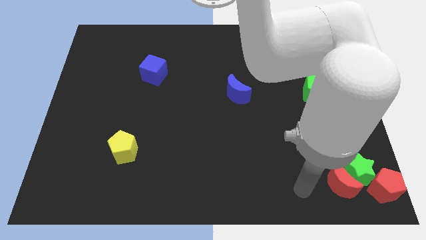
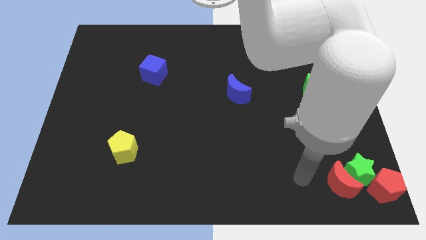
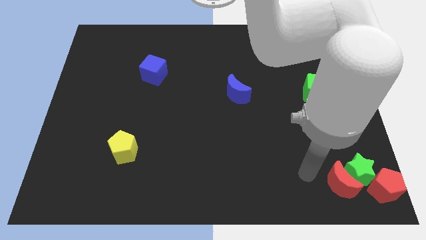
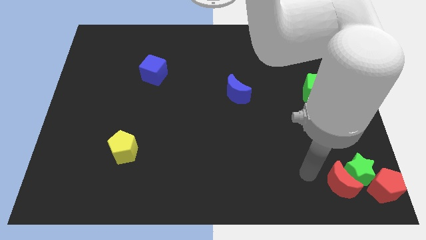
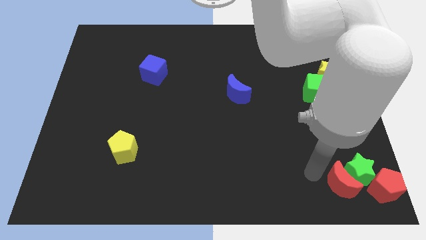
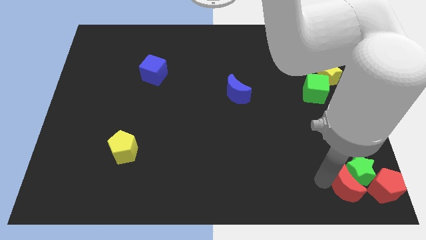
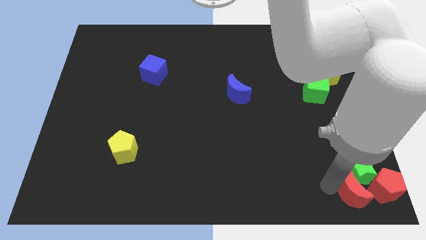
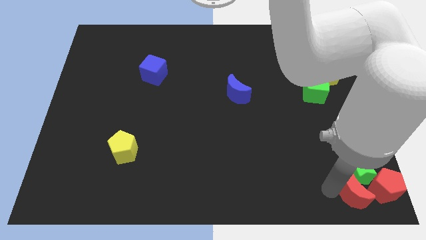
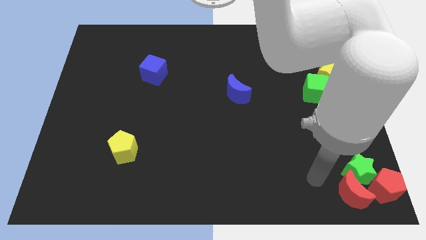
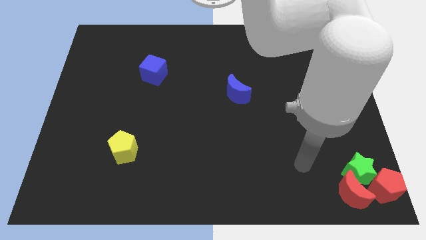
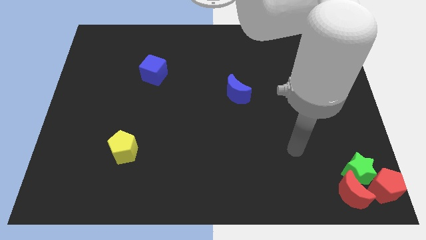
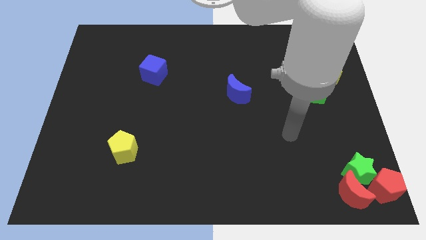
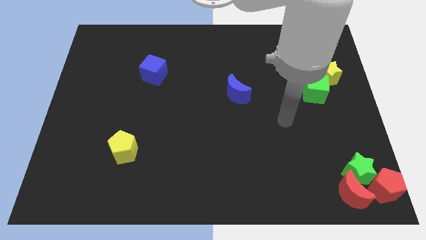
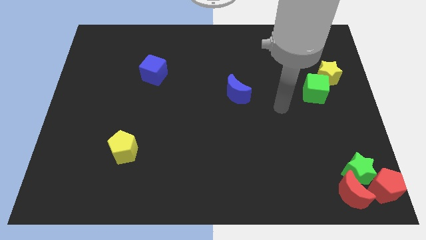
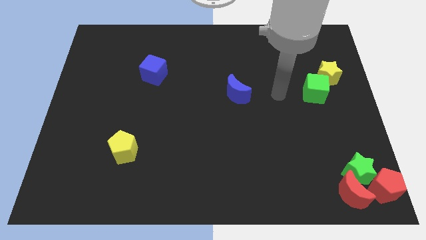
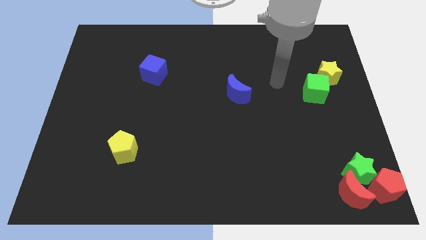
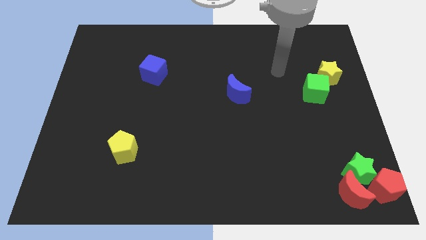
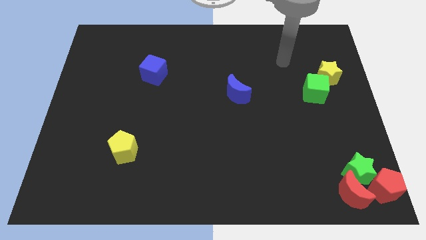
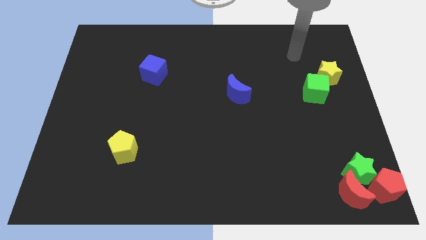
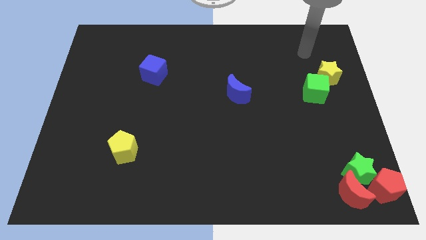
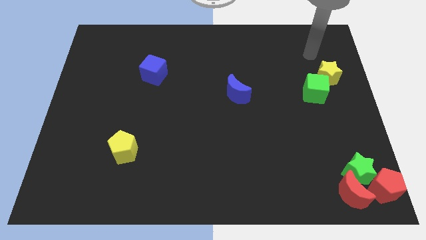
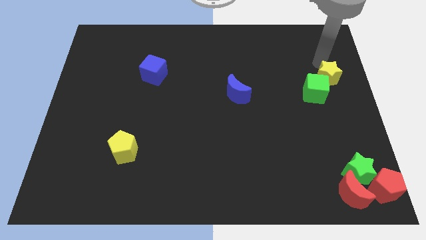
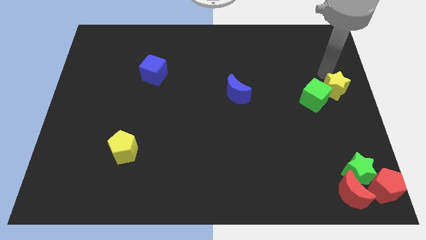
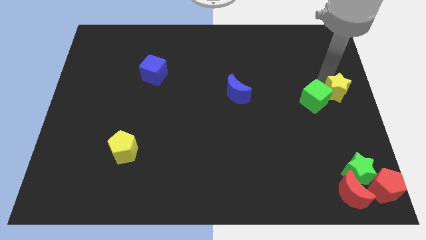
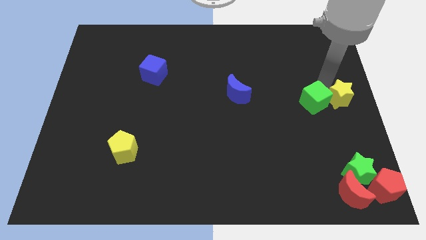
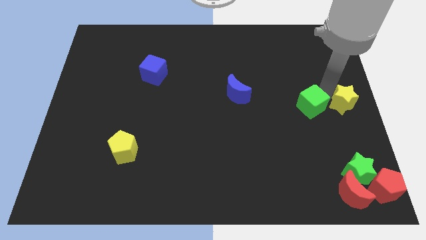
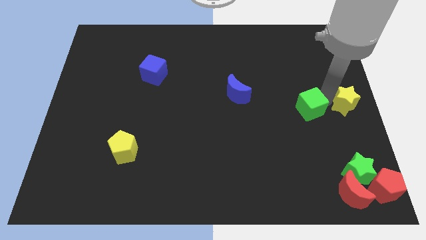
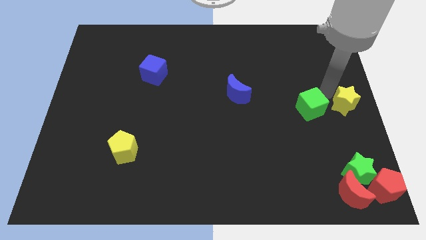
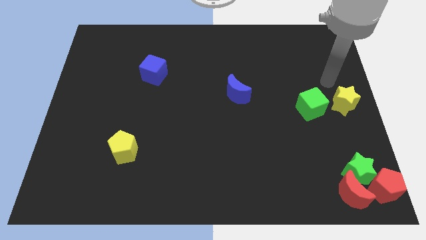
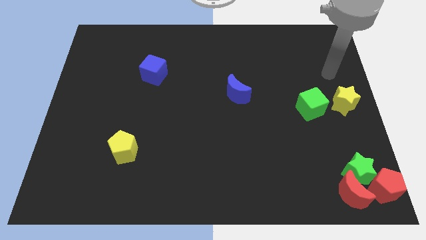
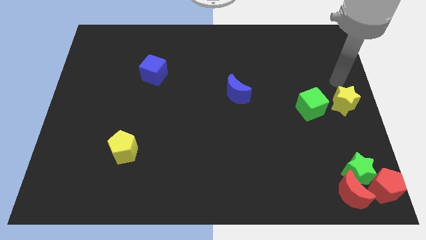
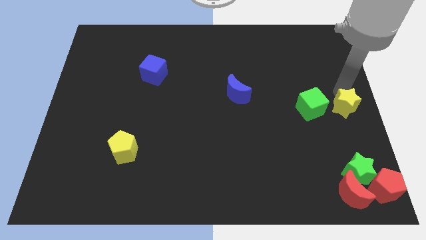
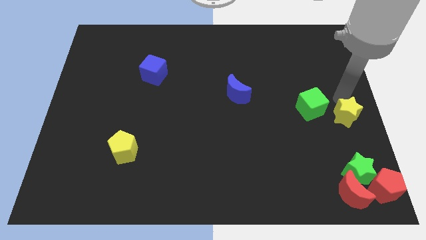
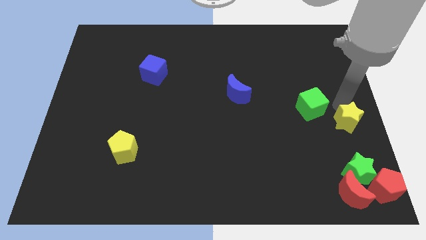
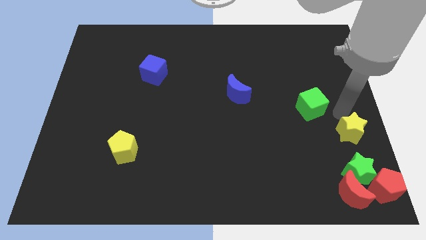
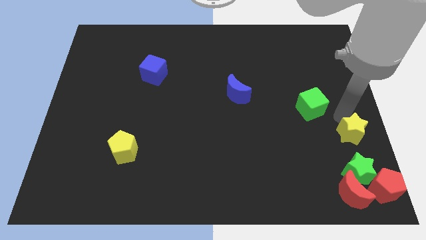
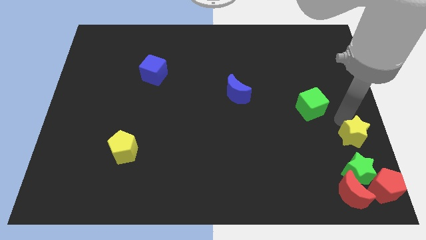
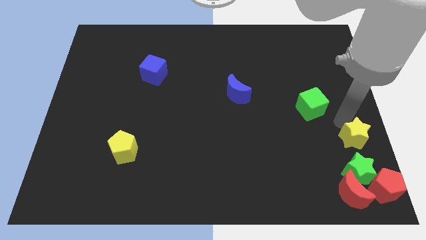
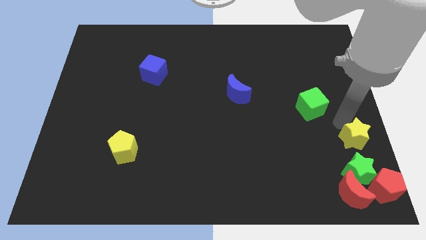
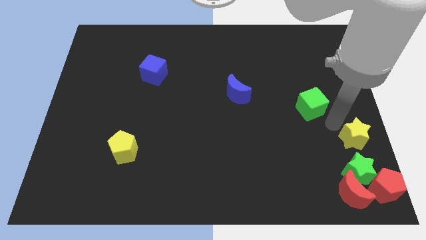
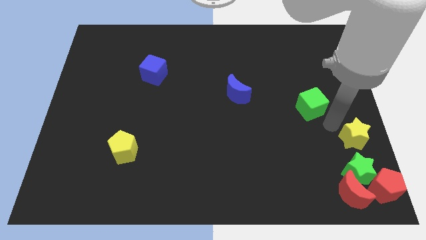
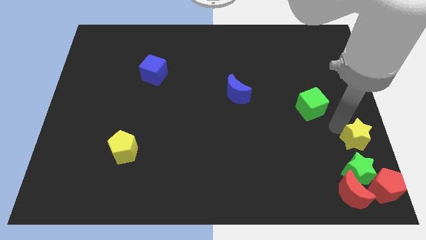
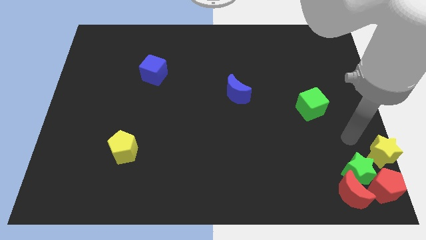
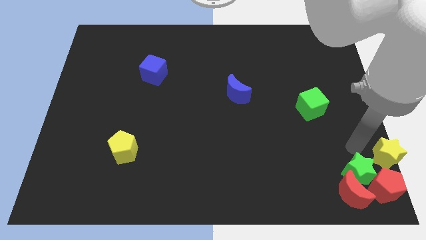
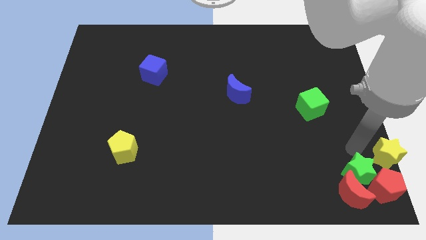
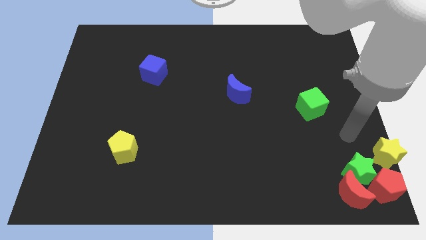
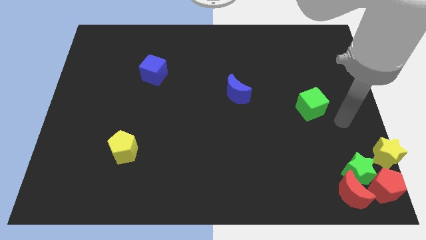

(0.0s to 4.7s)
push the yellow star to the right bottom of the board

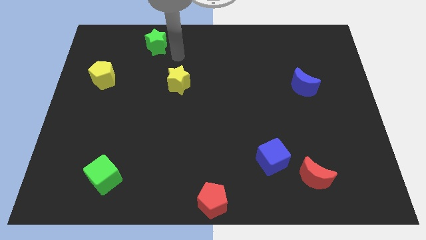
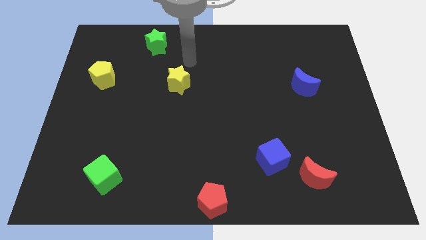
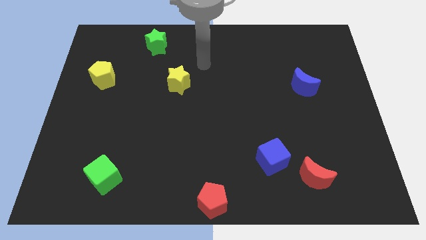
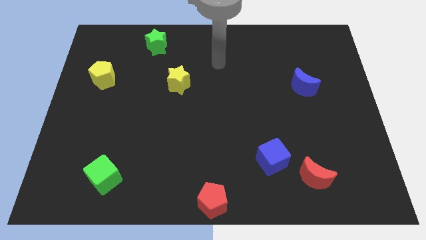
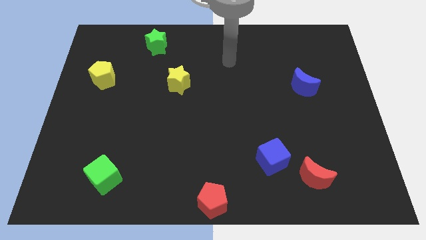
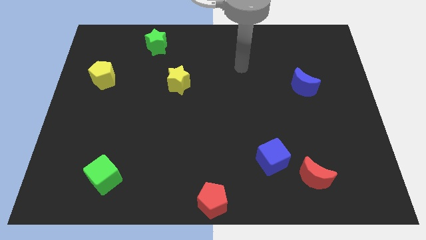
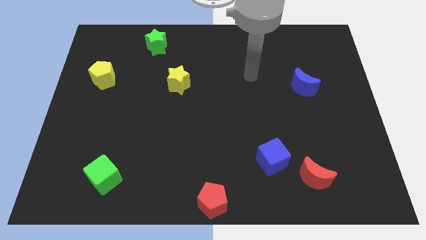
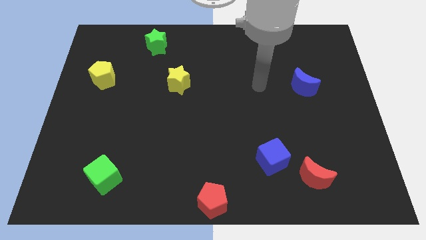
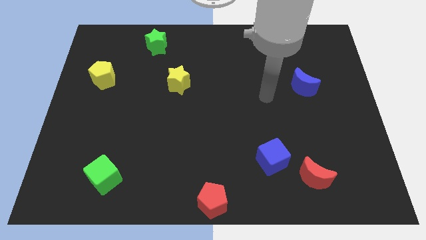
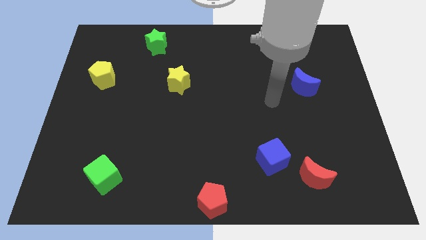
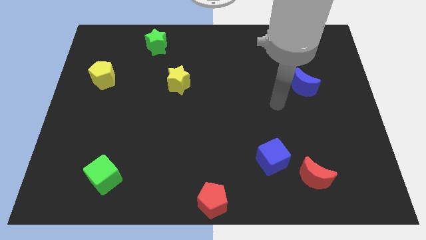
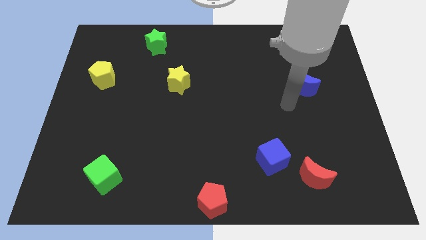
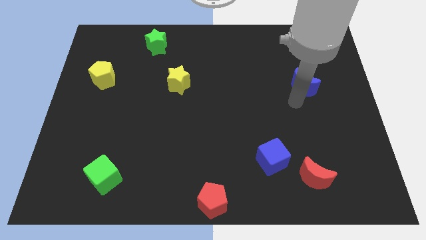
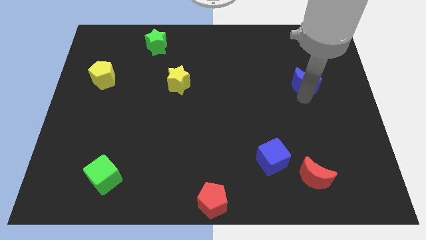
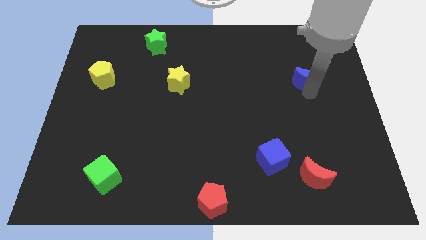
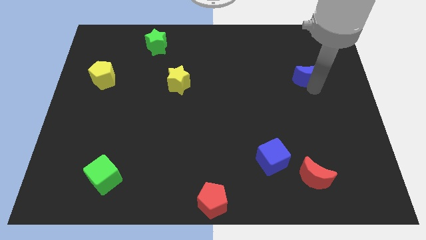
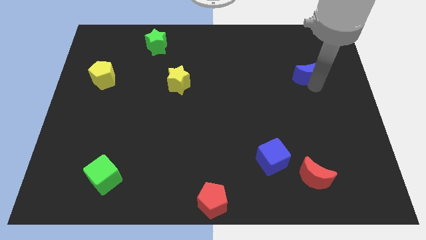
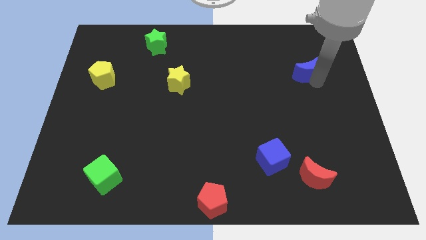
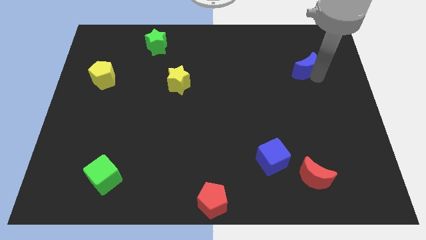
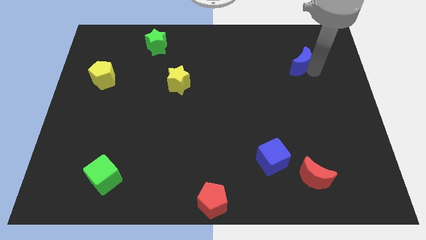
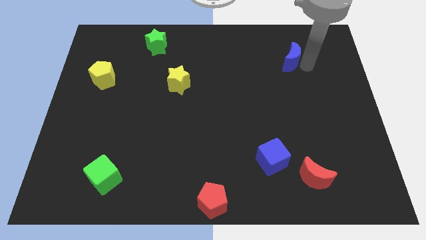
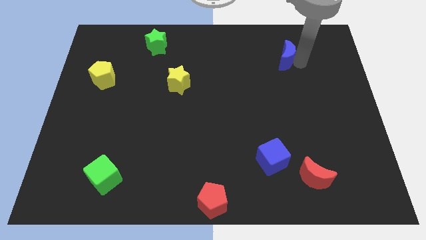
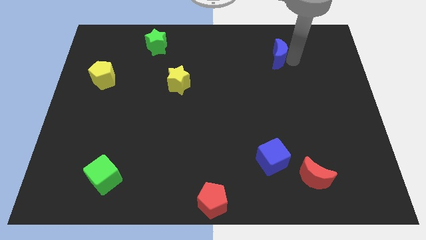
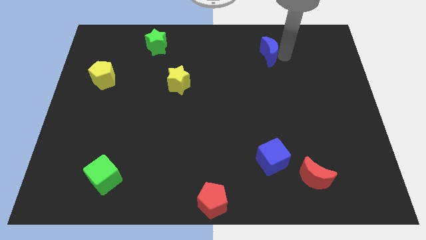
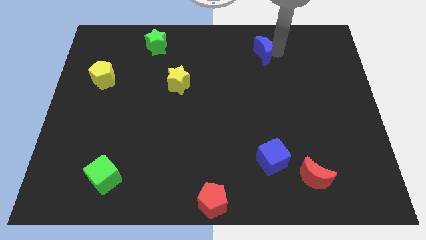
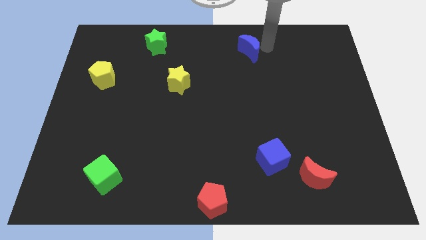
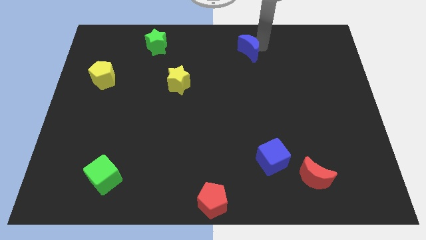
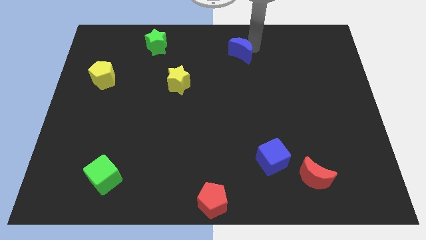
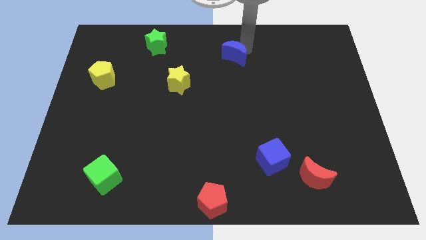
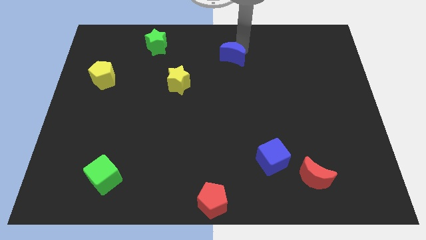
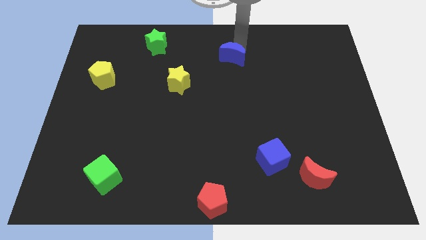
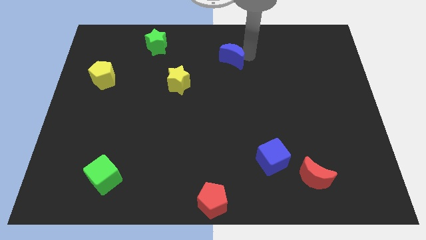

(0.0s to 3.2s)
push the blue moon towards the top center

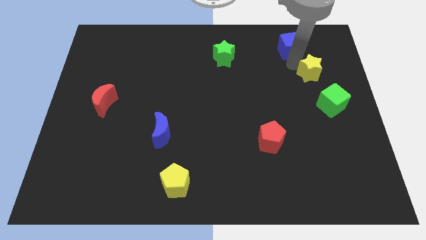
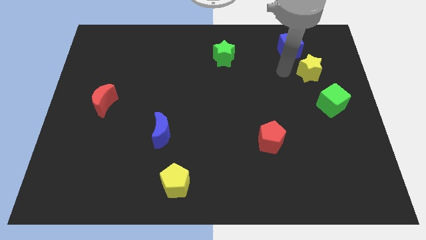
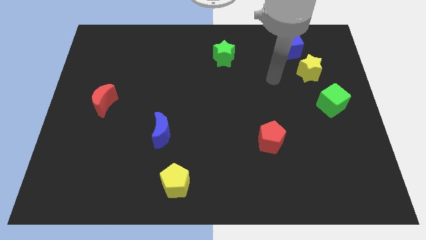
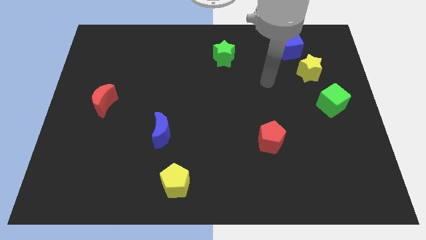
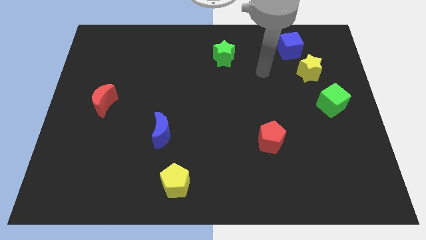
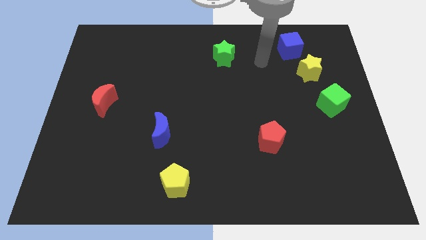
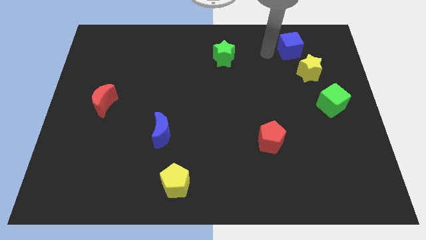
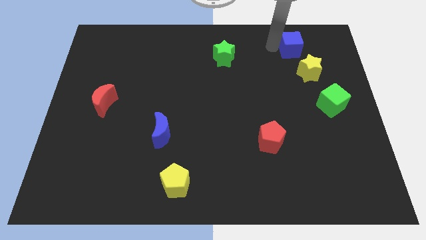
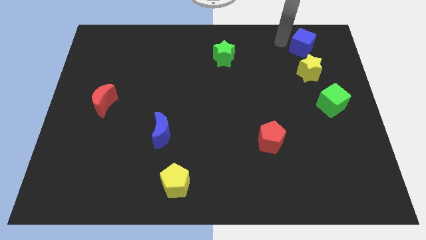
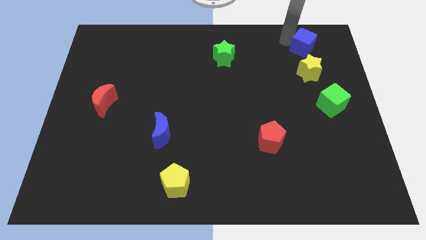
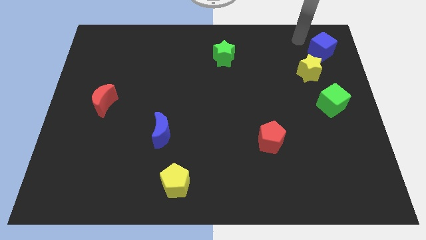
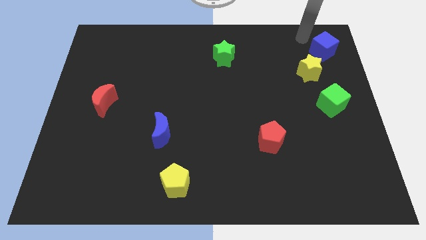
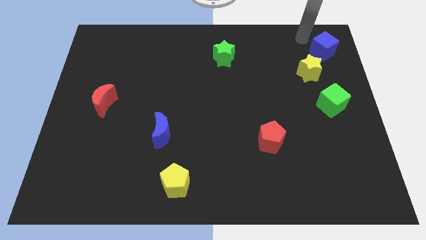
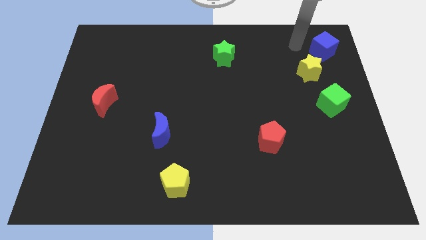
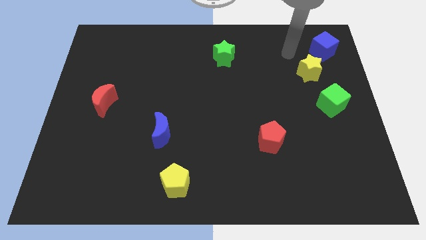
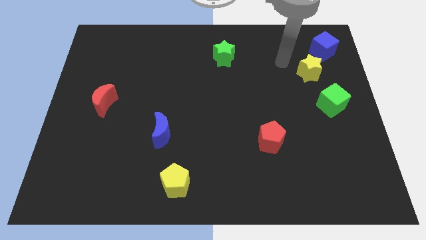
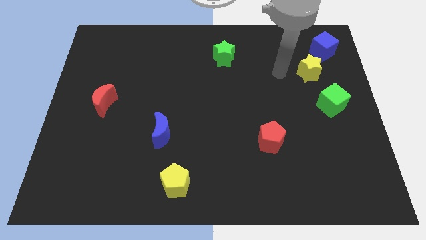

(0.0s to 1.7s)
push the blue cube towards the right
